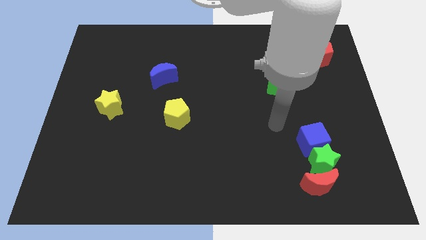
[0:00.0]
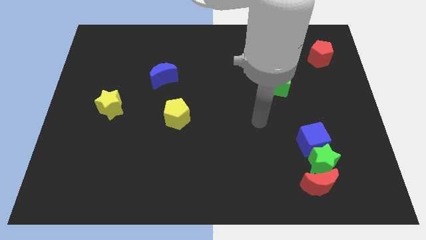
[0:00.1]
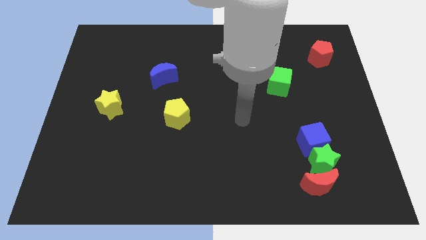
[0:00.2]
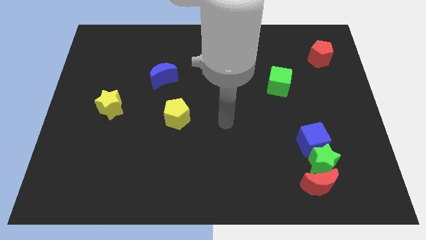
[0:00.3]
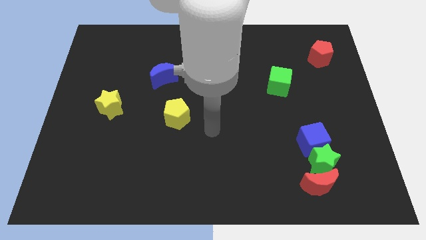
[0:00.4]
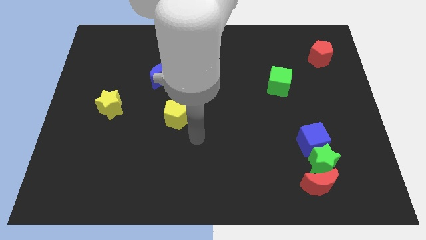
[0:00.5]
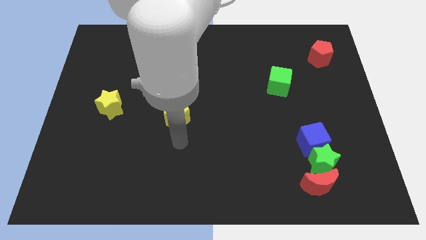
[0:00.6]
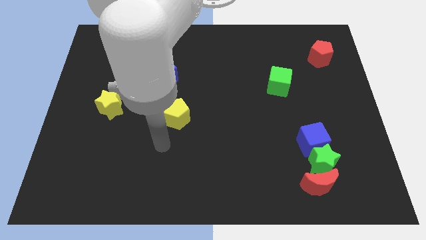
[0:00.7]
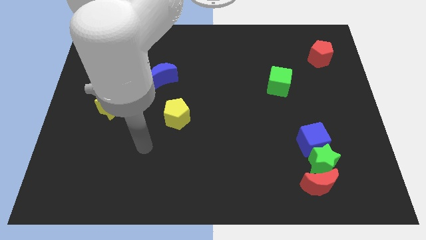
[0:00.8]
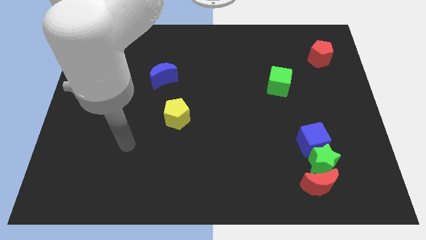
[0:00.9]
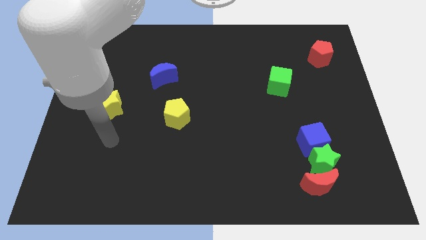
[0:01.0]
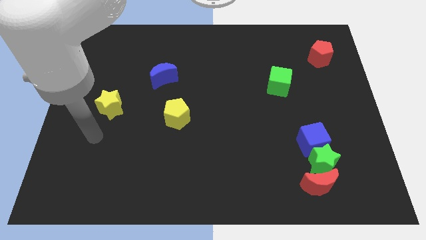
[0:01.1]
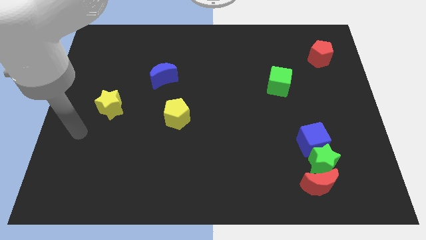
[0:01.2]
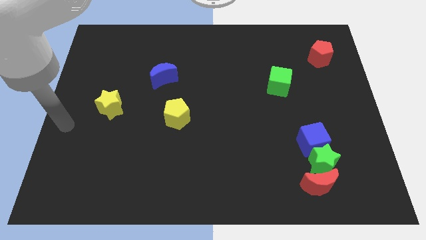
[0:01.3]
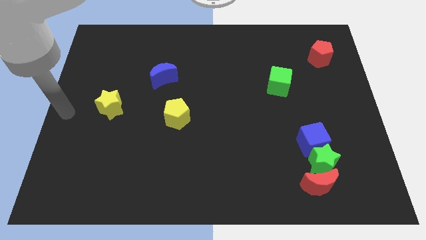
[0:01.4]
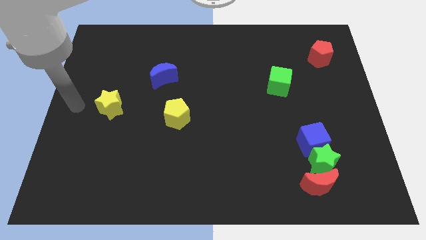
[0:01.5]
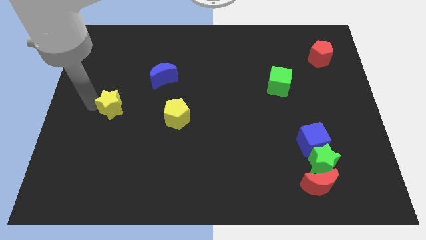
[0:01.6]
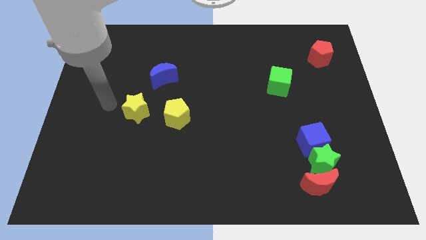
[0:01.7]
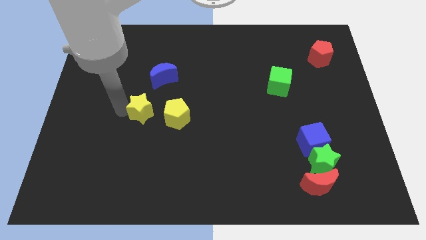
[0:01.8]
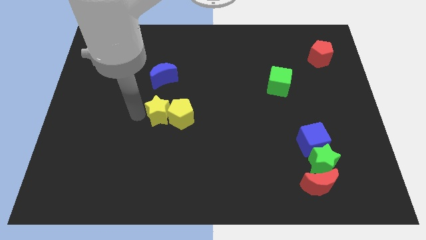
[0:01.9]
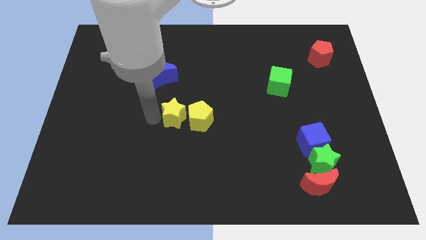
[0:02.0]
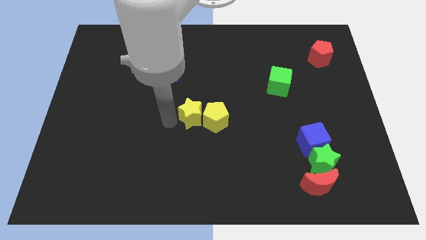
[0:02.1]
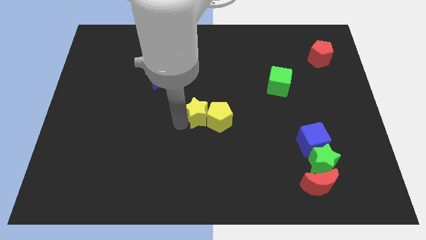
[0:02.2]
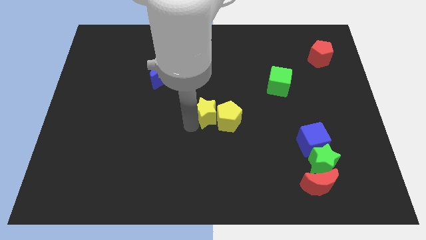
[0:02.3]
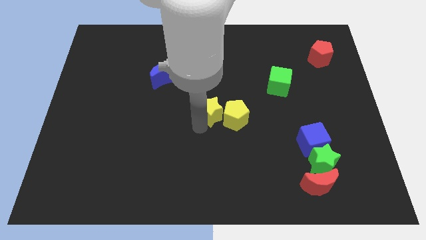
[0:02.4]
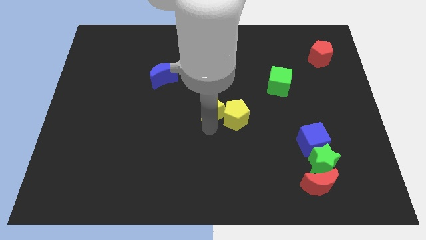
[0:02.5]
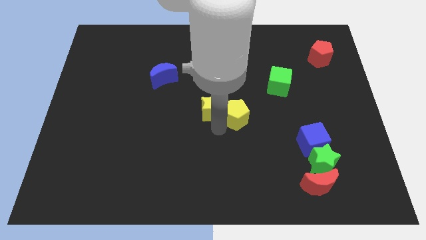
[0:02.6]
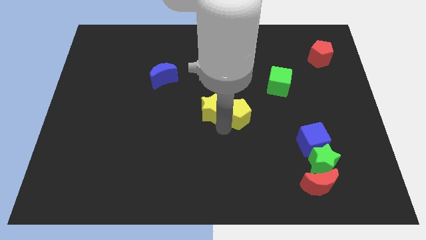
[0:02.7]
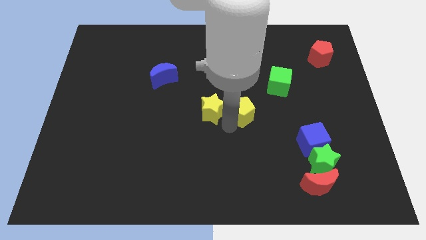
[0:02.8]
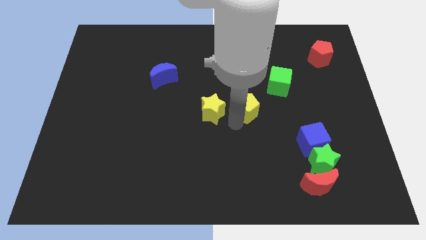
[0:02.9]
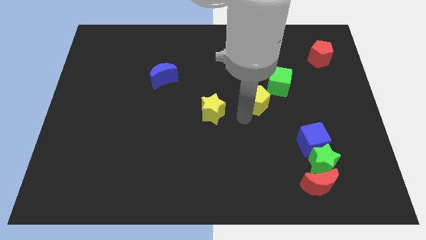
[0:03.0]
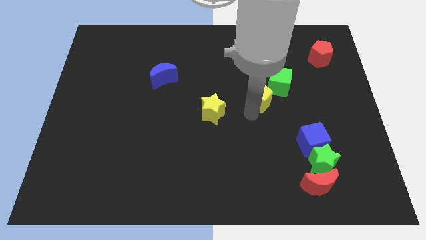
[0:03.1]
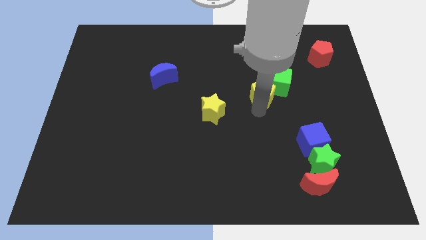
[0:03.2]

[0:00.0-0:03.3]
push the yellow star into the yellow pentagon

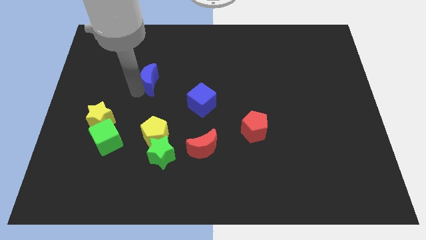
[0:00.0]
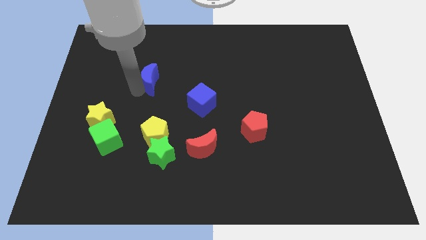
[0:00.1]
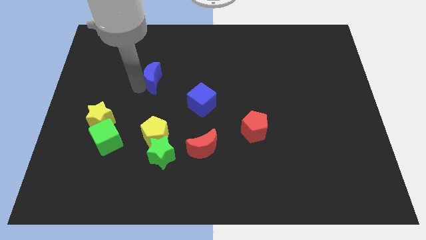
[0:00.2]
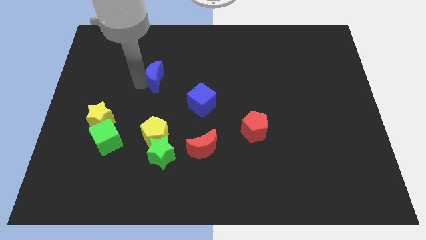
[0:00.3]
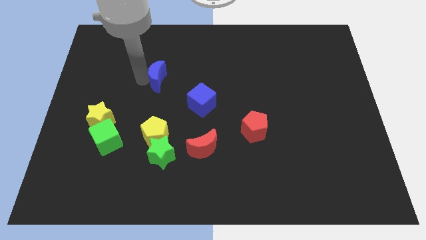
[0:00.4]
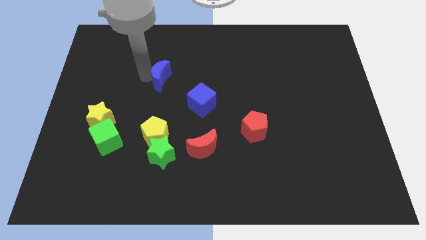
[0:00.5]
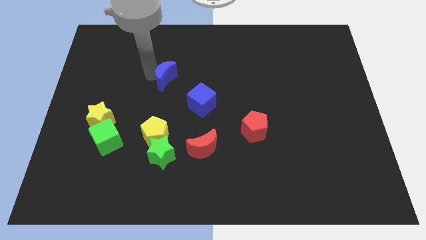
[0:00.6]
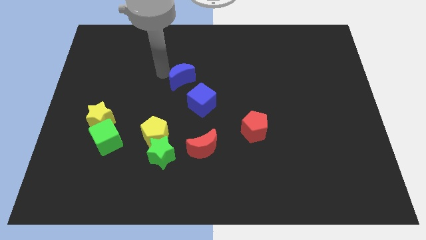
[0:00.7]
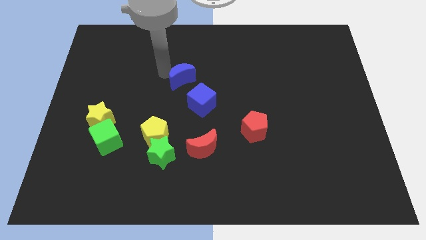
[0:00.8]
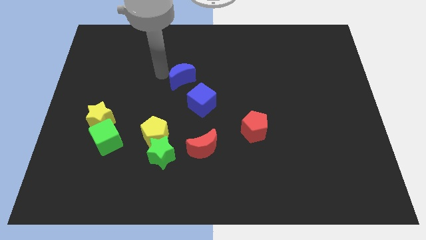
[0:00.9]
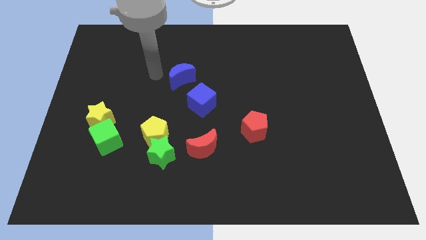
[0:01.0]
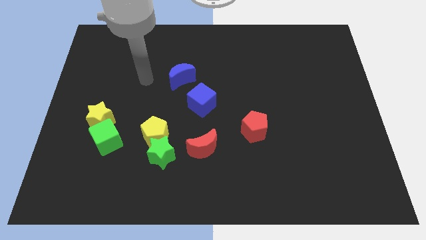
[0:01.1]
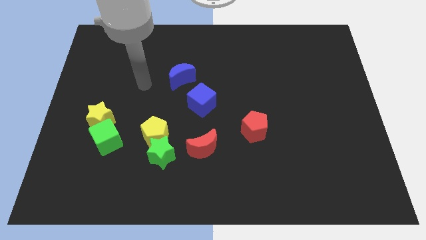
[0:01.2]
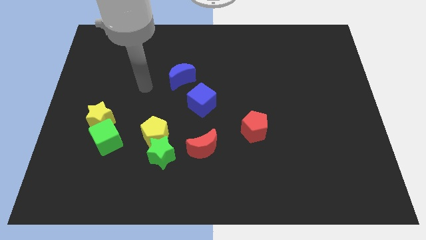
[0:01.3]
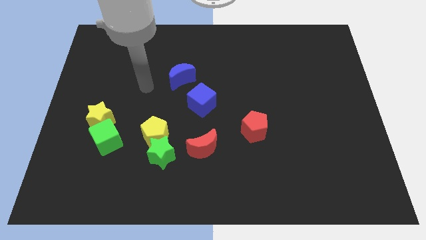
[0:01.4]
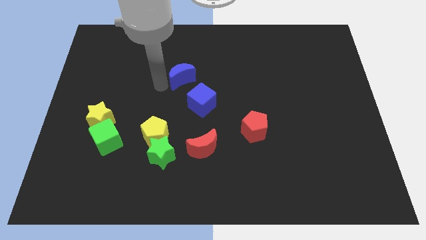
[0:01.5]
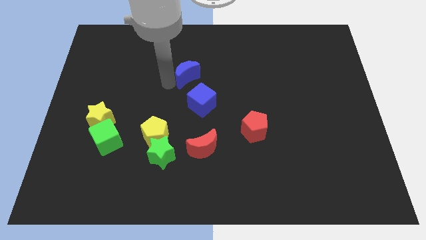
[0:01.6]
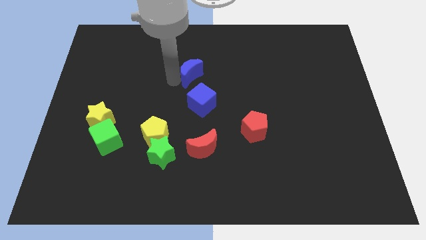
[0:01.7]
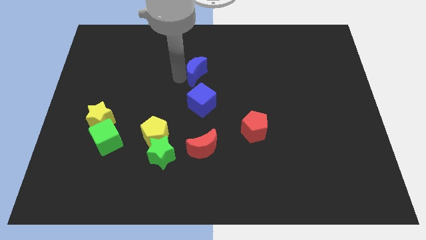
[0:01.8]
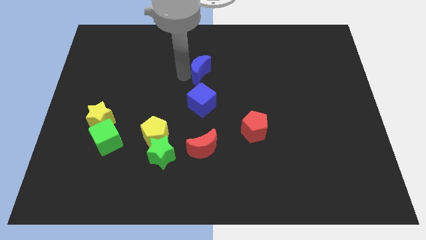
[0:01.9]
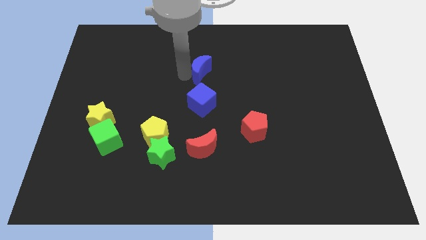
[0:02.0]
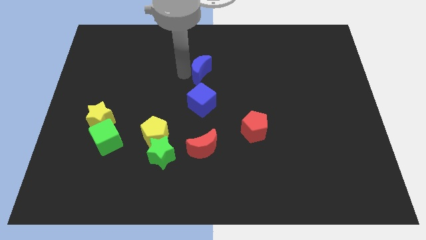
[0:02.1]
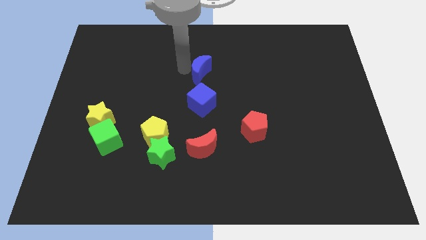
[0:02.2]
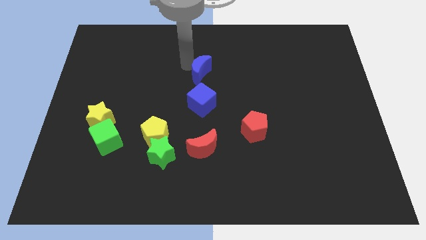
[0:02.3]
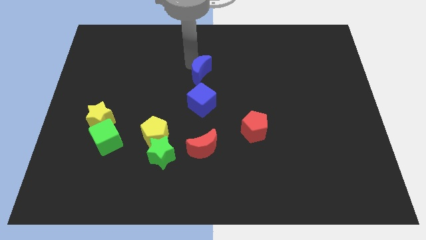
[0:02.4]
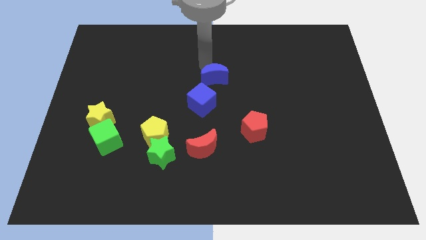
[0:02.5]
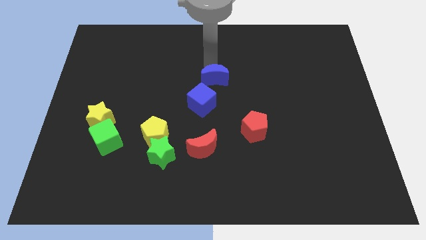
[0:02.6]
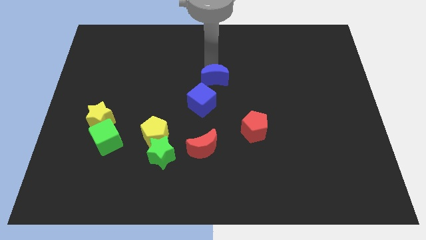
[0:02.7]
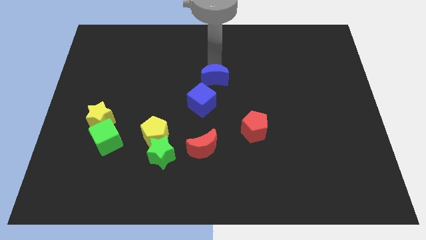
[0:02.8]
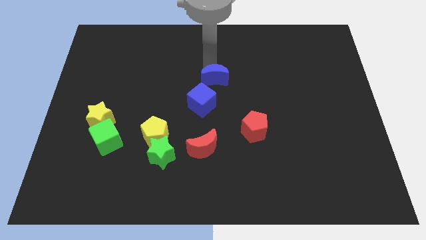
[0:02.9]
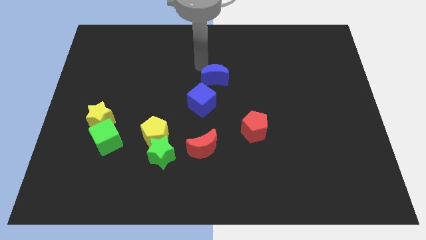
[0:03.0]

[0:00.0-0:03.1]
place blue moon above blue cube

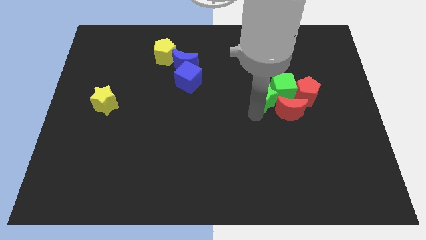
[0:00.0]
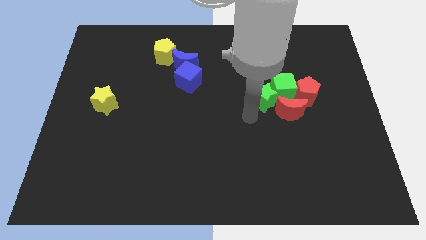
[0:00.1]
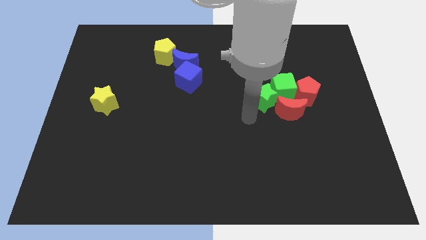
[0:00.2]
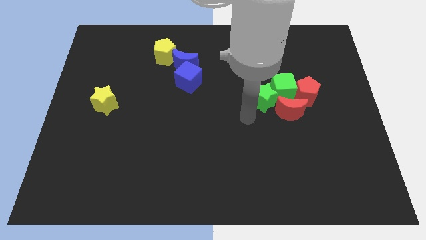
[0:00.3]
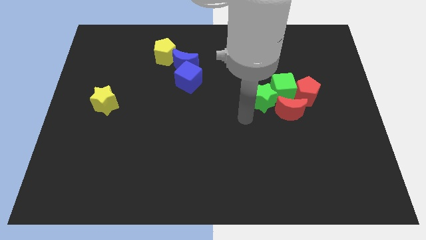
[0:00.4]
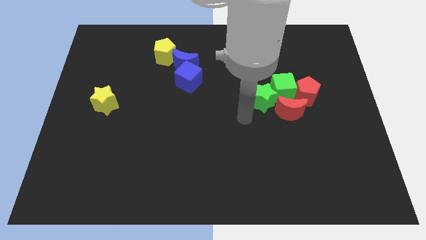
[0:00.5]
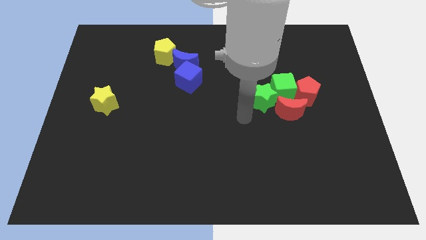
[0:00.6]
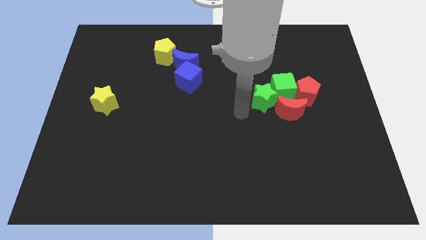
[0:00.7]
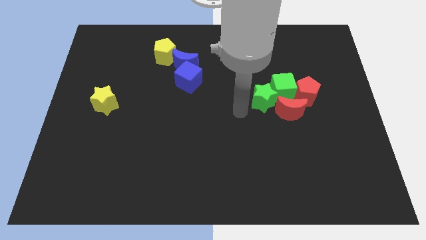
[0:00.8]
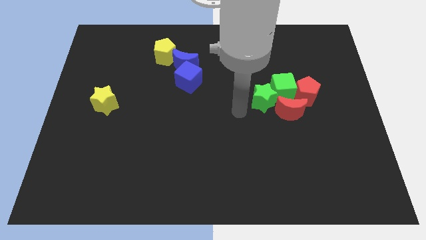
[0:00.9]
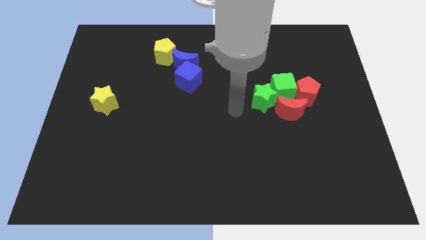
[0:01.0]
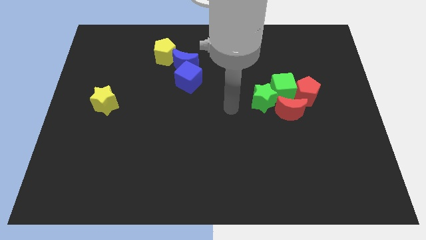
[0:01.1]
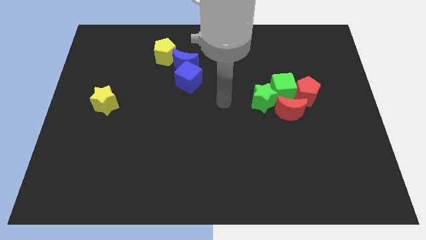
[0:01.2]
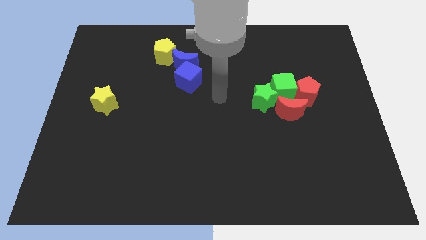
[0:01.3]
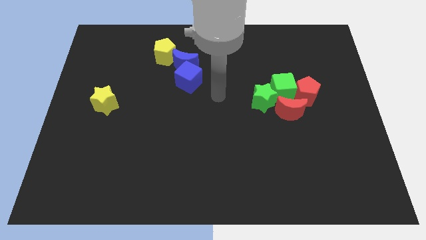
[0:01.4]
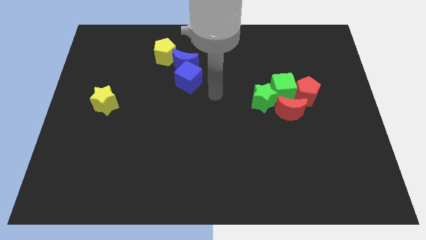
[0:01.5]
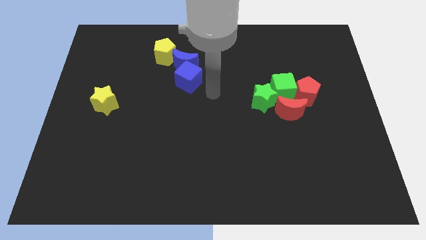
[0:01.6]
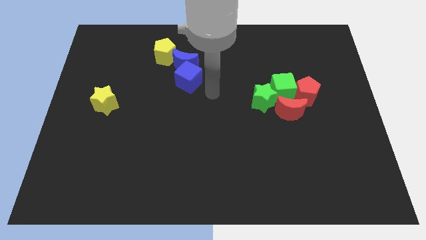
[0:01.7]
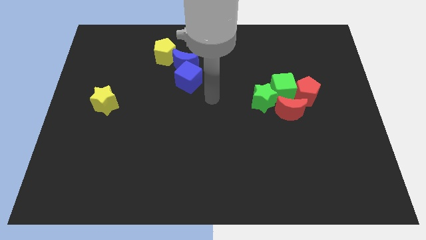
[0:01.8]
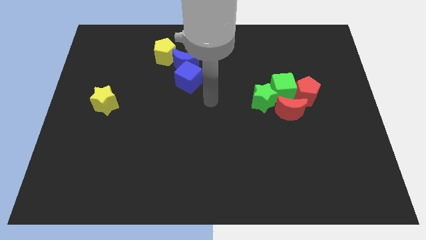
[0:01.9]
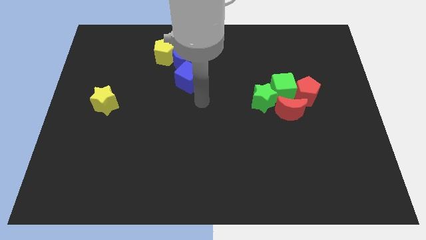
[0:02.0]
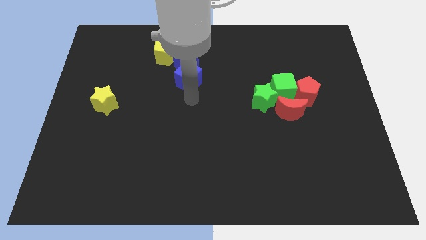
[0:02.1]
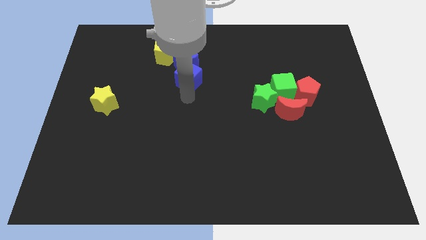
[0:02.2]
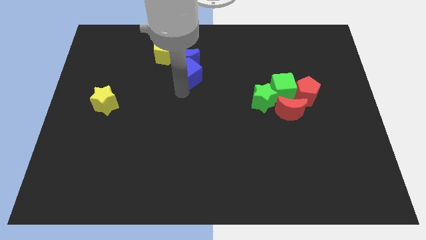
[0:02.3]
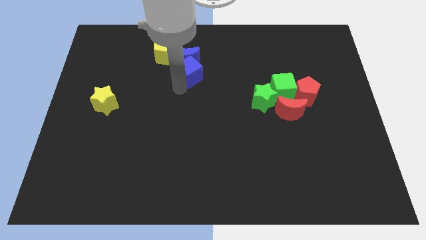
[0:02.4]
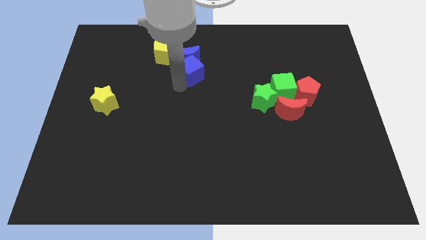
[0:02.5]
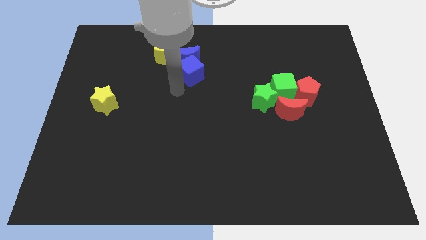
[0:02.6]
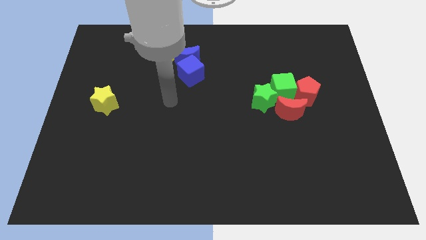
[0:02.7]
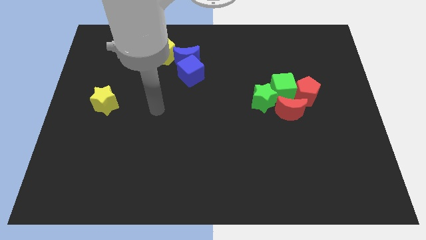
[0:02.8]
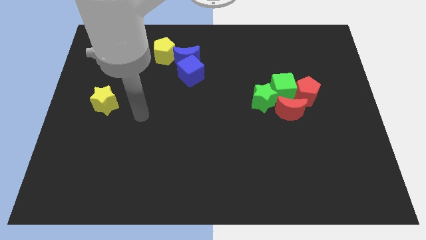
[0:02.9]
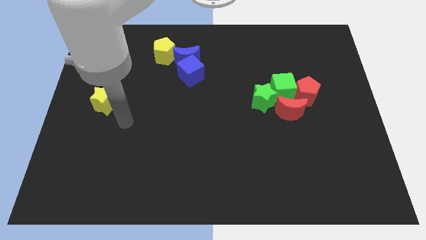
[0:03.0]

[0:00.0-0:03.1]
slightly push the blue blocks up
